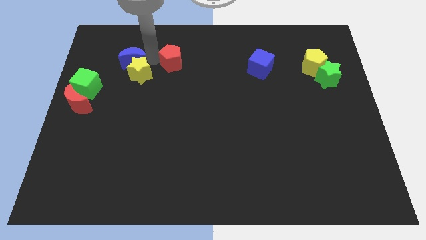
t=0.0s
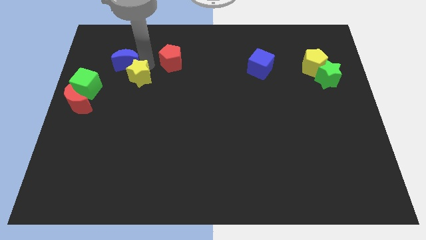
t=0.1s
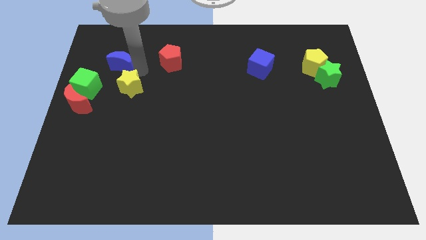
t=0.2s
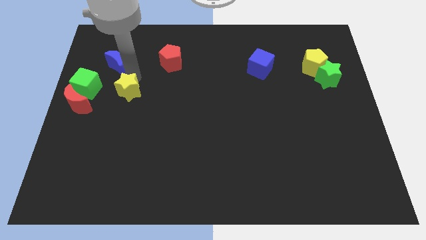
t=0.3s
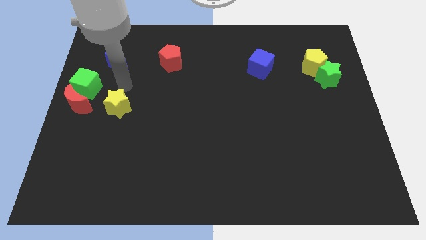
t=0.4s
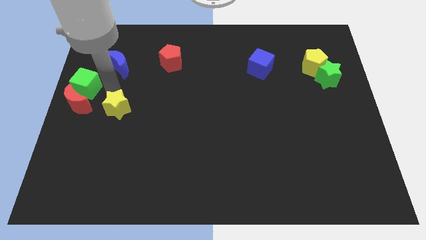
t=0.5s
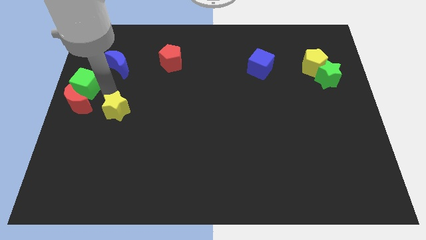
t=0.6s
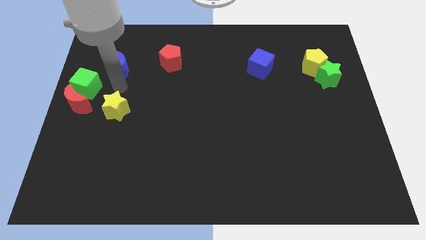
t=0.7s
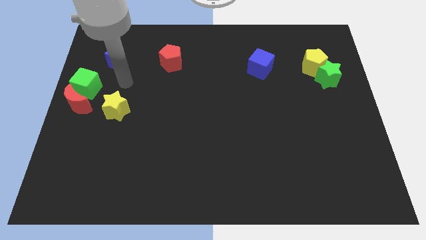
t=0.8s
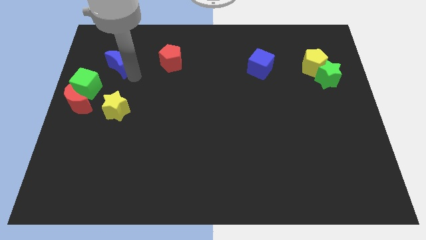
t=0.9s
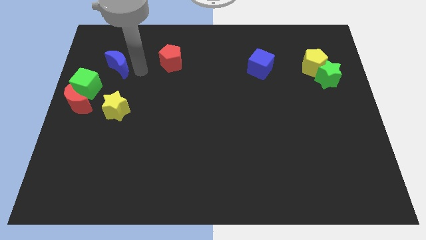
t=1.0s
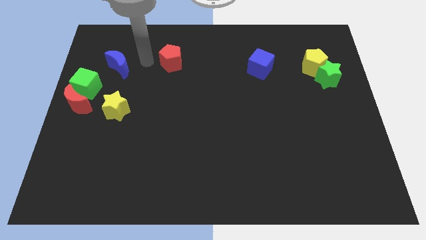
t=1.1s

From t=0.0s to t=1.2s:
push the yellow star to the right of the red crescent

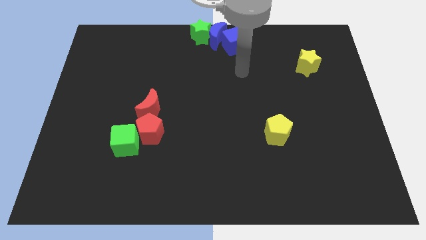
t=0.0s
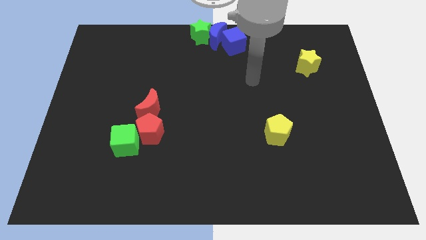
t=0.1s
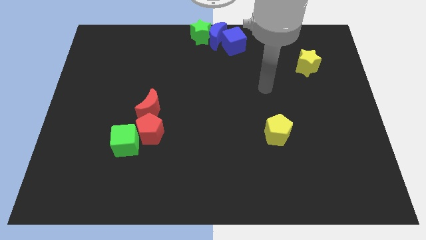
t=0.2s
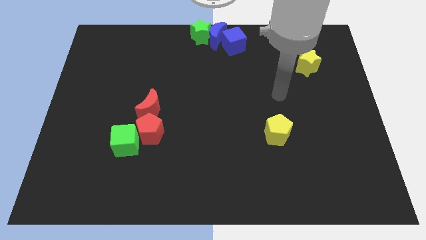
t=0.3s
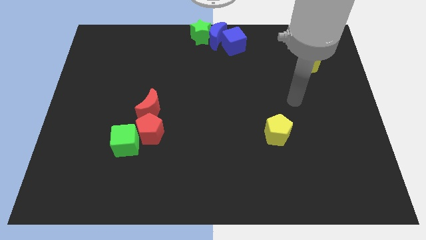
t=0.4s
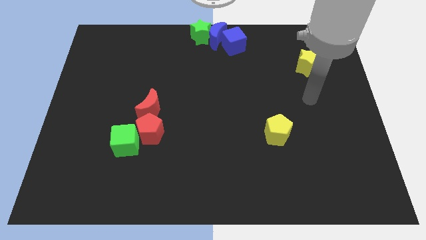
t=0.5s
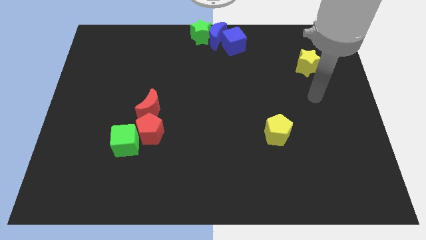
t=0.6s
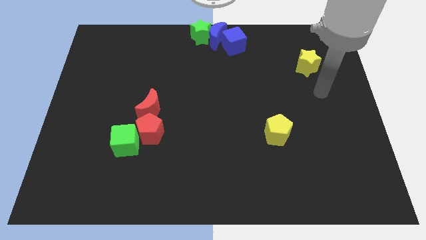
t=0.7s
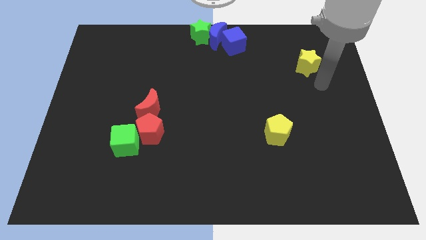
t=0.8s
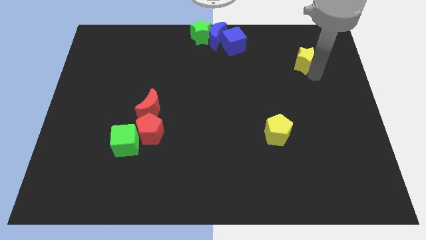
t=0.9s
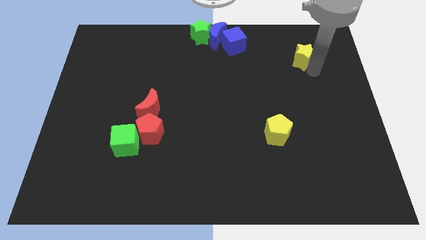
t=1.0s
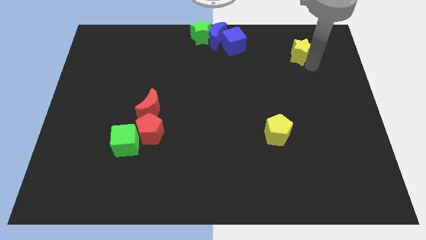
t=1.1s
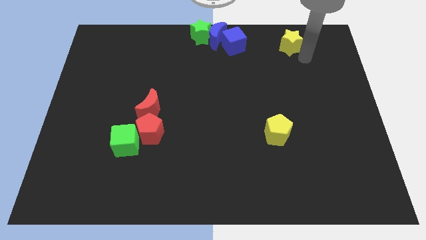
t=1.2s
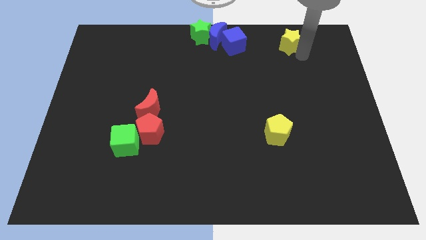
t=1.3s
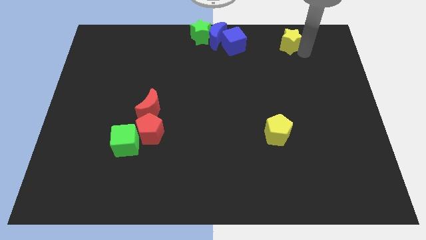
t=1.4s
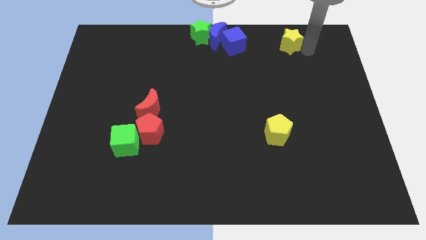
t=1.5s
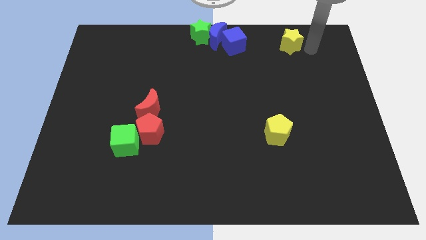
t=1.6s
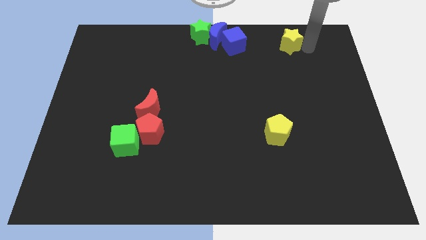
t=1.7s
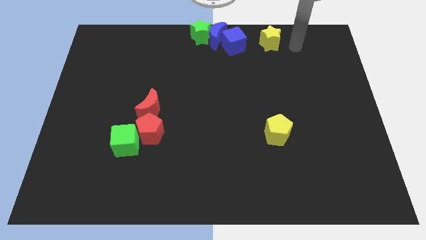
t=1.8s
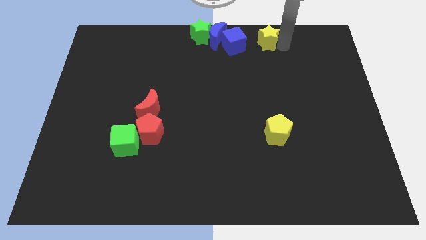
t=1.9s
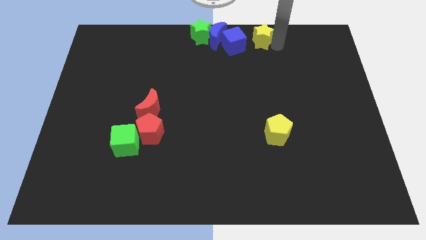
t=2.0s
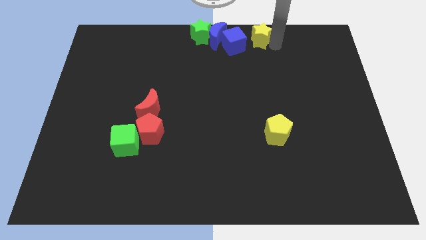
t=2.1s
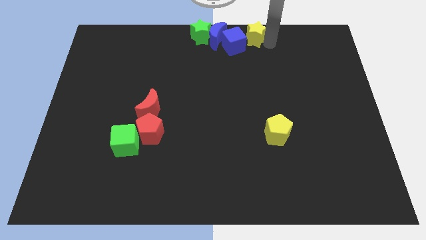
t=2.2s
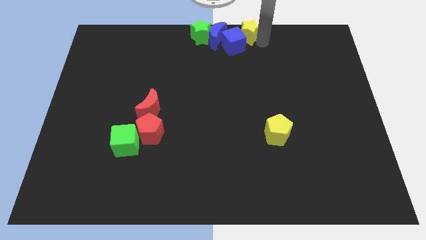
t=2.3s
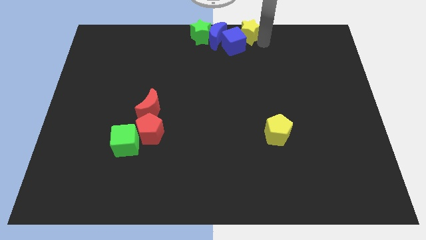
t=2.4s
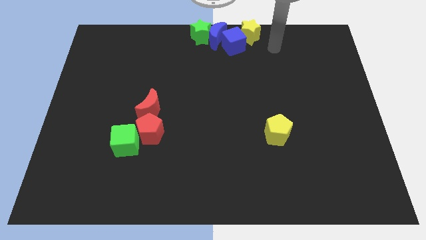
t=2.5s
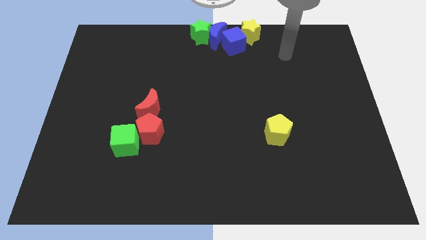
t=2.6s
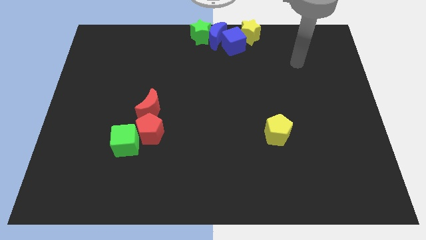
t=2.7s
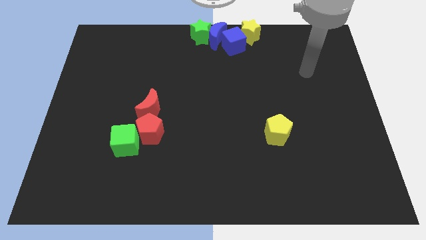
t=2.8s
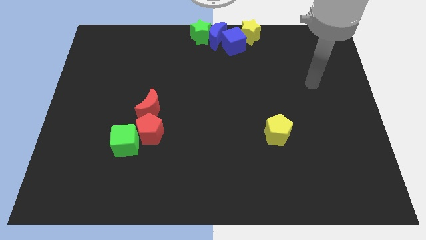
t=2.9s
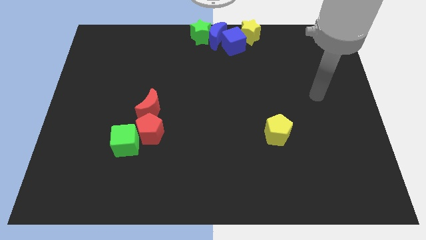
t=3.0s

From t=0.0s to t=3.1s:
place the yellow star above the blue cube

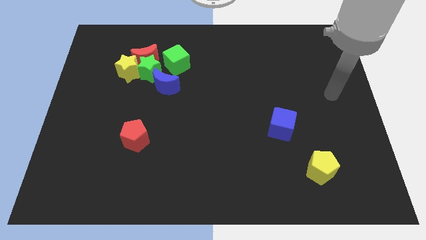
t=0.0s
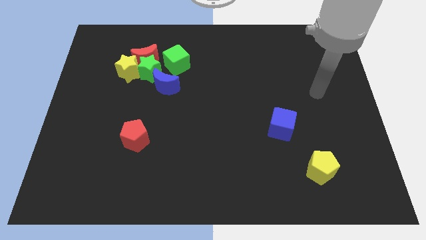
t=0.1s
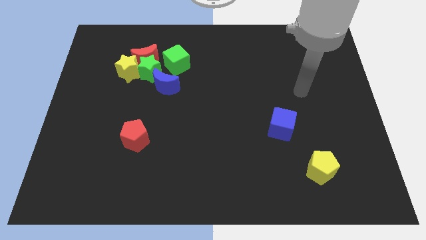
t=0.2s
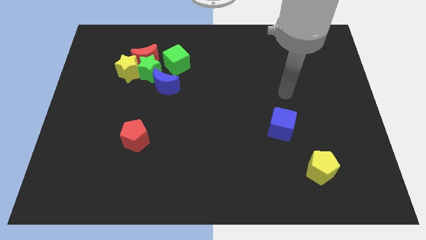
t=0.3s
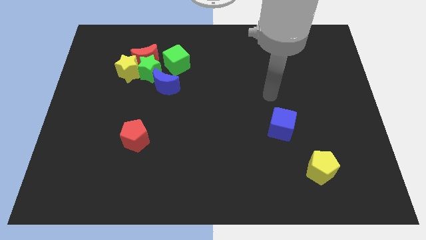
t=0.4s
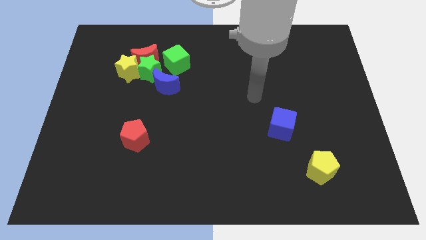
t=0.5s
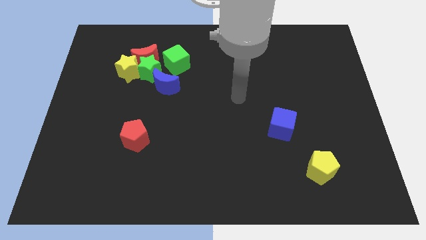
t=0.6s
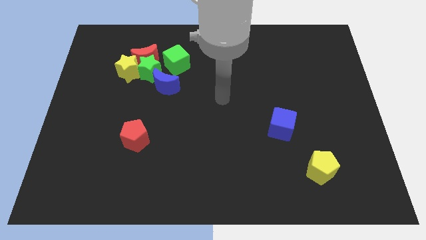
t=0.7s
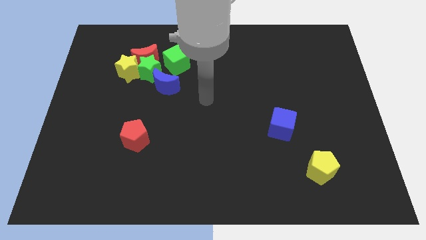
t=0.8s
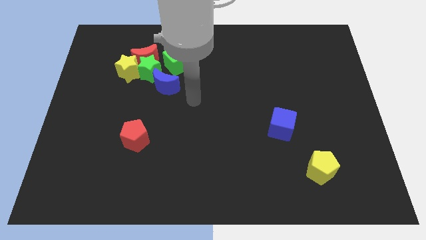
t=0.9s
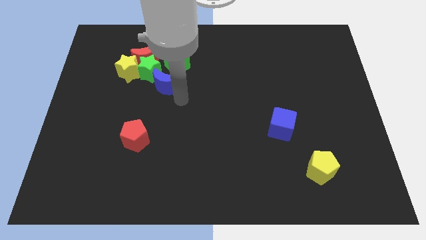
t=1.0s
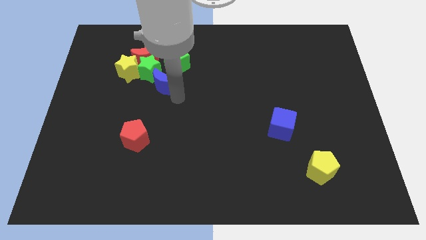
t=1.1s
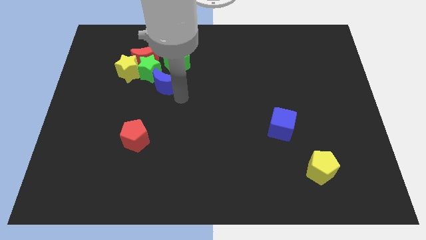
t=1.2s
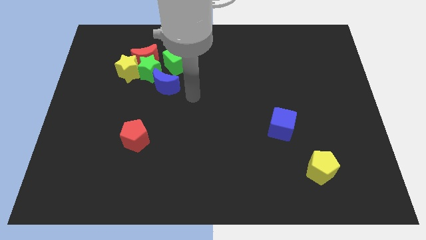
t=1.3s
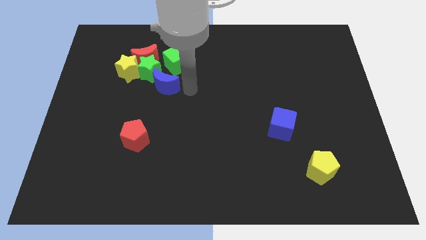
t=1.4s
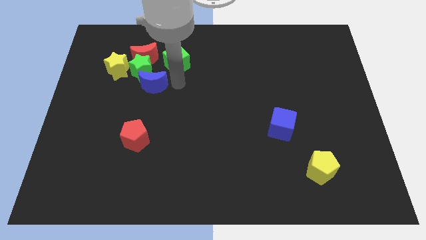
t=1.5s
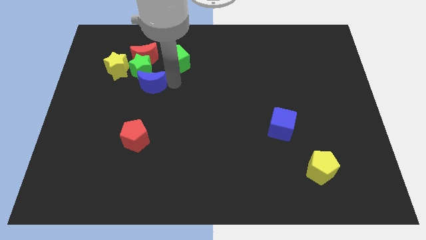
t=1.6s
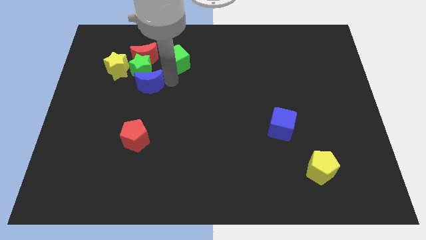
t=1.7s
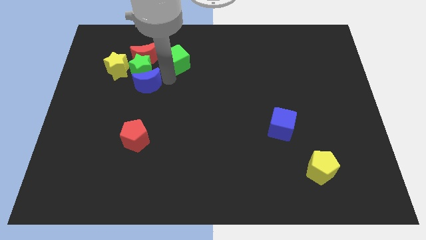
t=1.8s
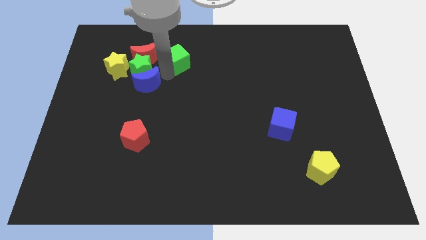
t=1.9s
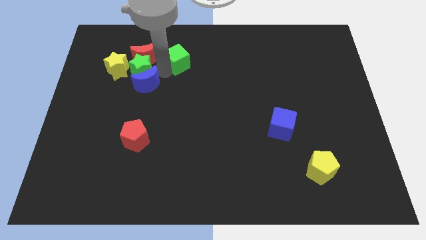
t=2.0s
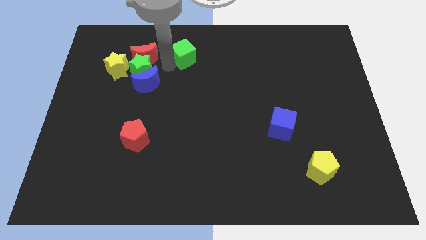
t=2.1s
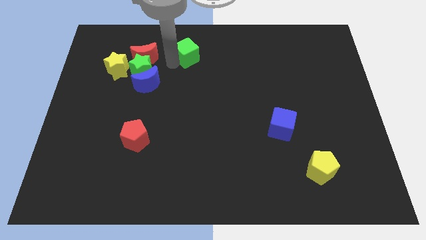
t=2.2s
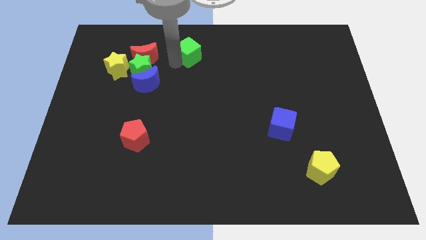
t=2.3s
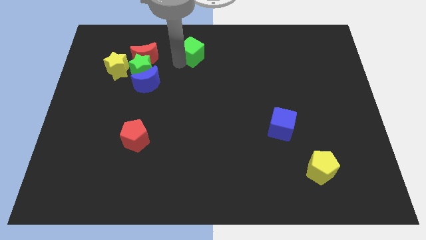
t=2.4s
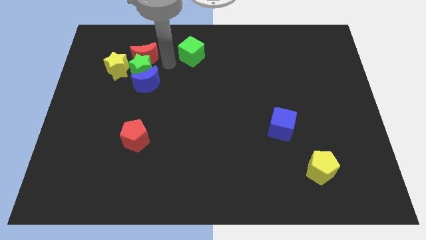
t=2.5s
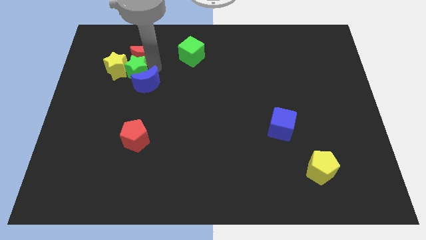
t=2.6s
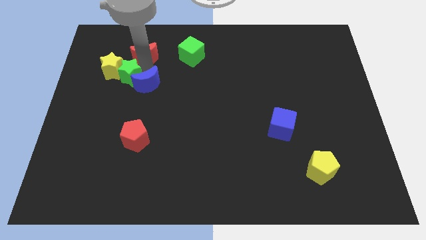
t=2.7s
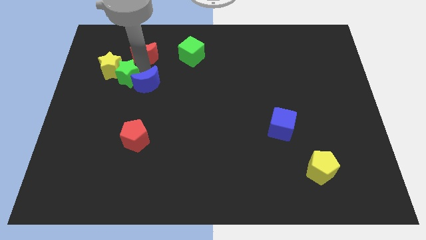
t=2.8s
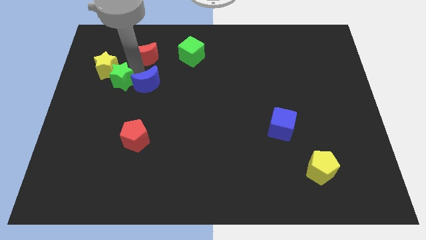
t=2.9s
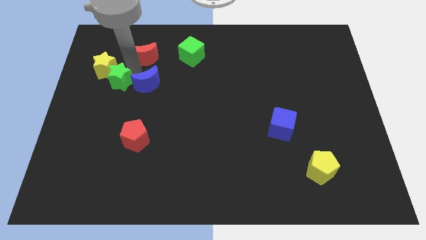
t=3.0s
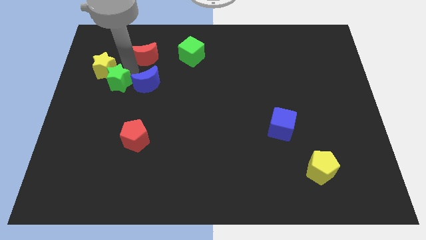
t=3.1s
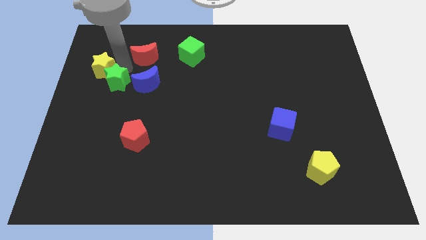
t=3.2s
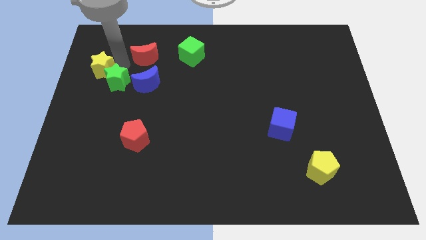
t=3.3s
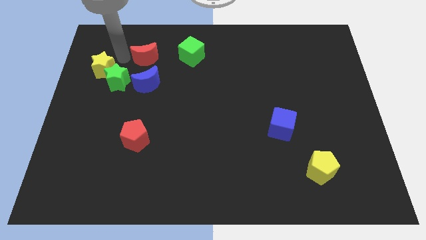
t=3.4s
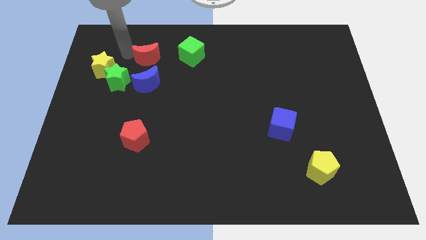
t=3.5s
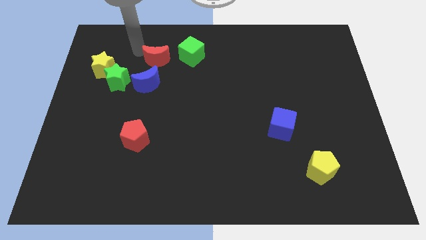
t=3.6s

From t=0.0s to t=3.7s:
separate the green star and green cube

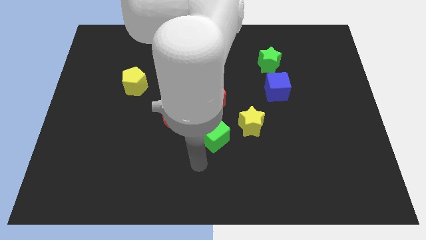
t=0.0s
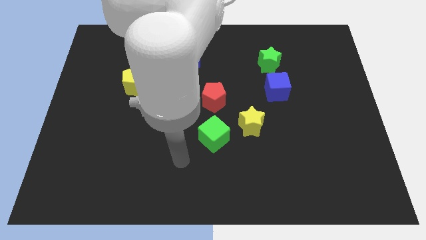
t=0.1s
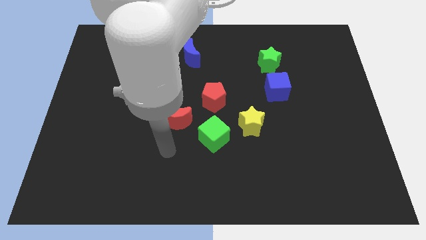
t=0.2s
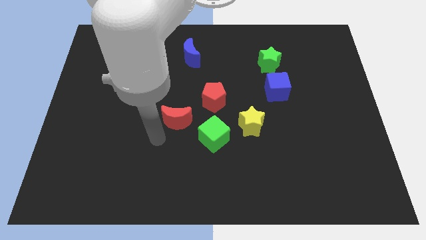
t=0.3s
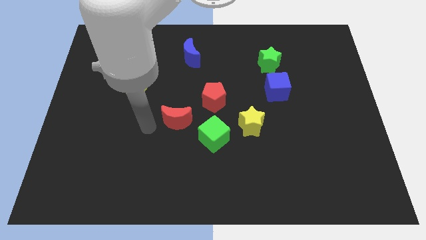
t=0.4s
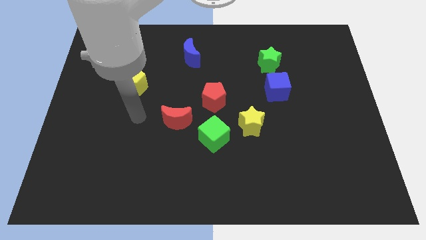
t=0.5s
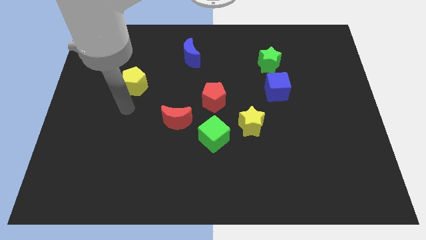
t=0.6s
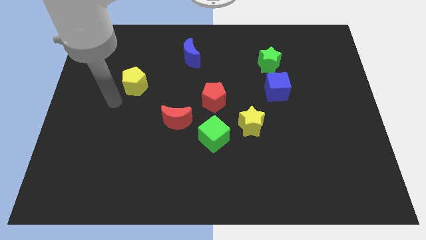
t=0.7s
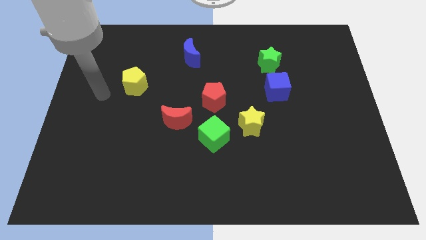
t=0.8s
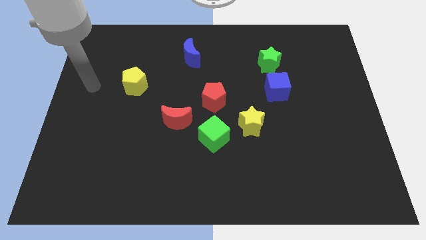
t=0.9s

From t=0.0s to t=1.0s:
move the arm away from the yellow star
